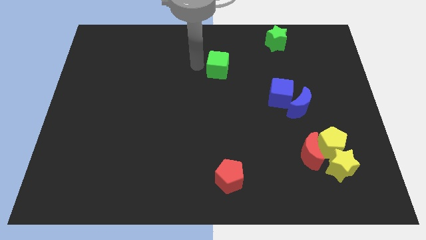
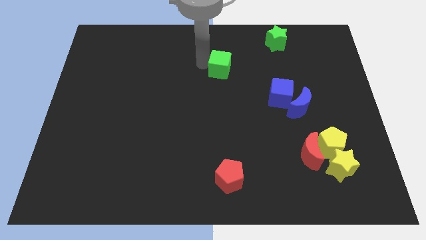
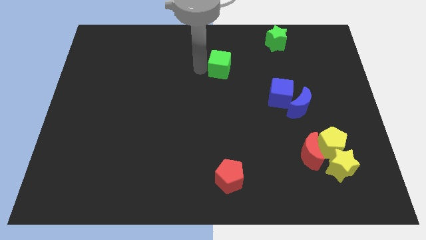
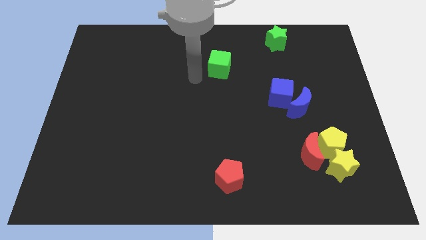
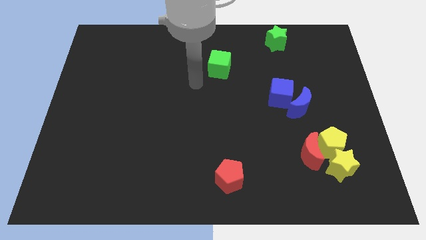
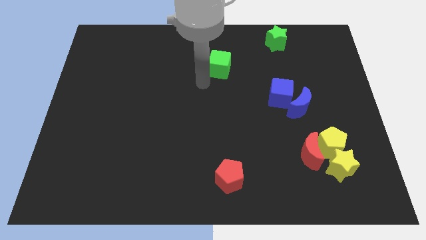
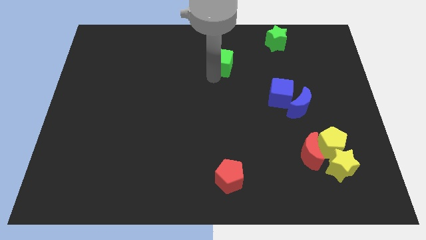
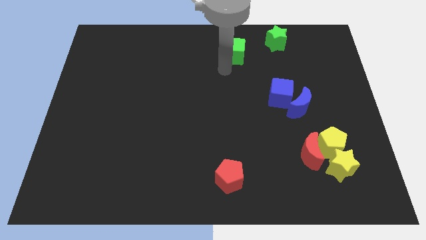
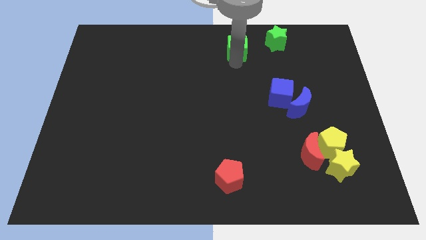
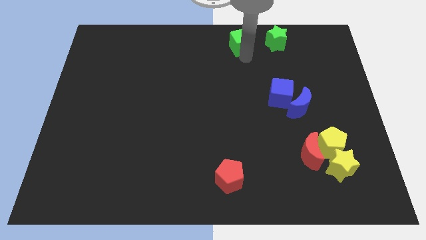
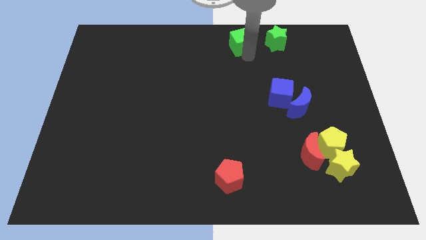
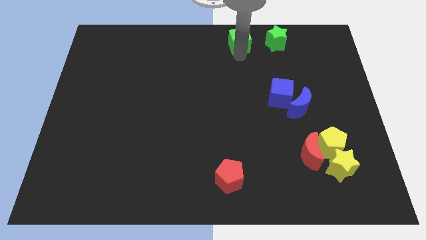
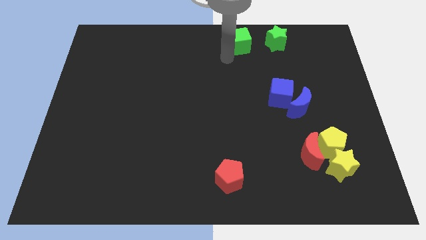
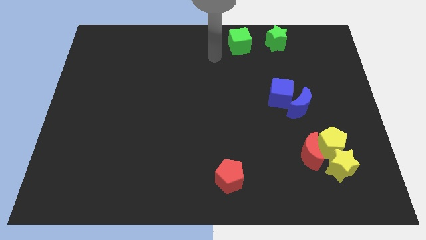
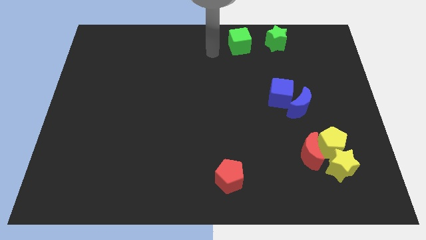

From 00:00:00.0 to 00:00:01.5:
place the green cube to the left side of the green star

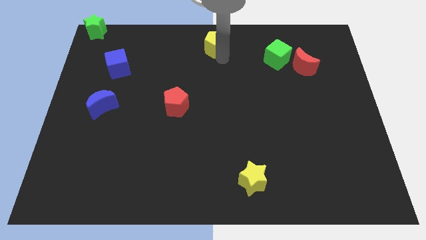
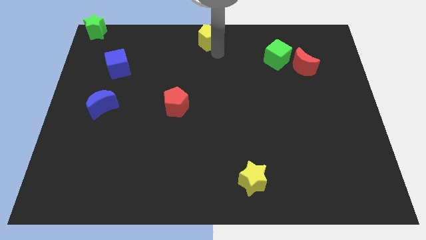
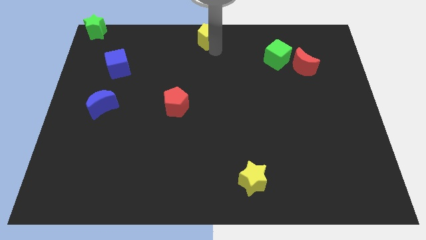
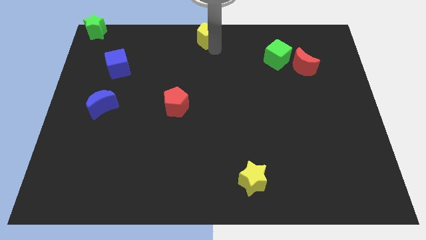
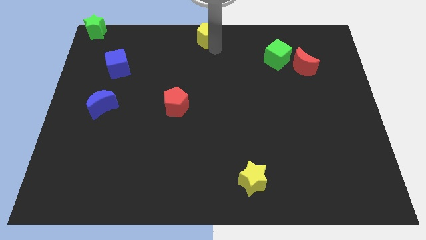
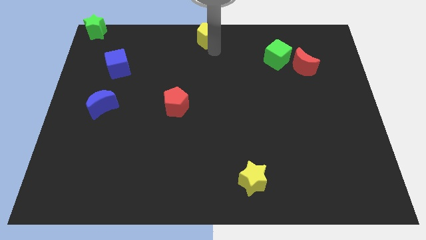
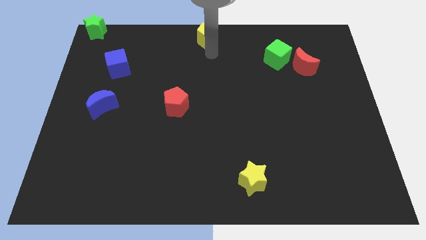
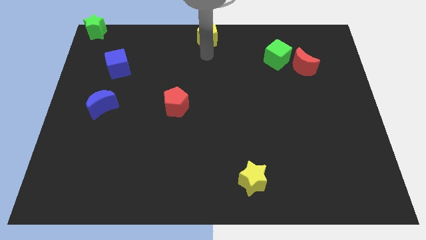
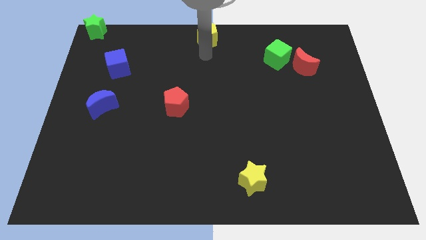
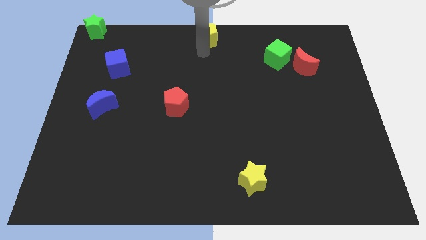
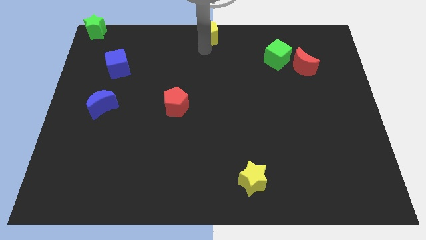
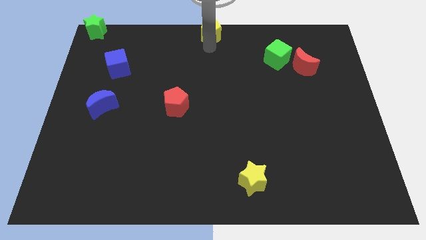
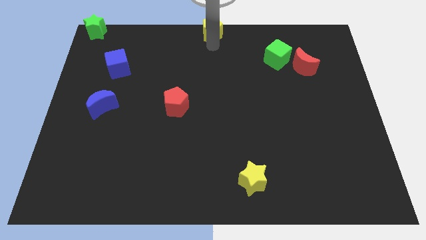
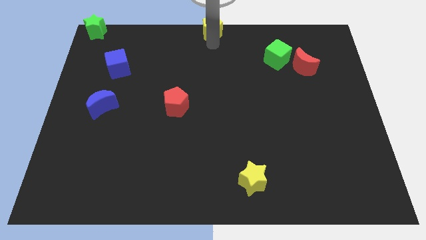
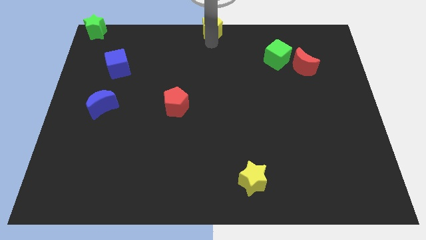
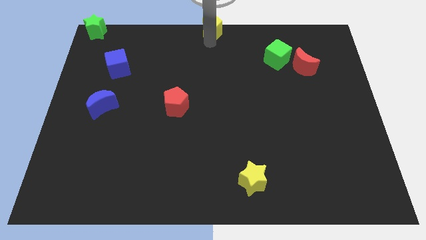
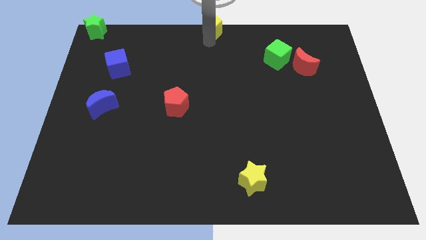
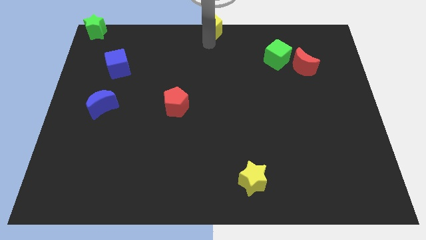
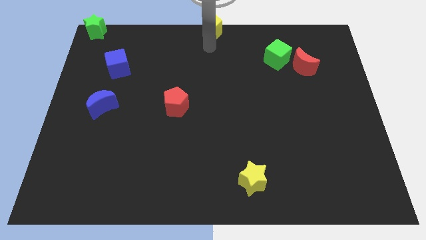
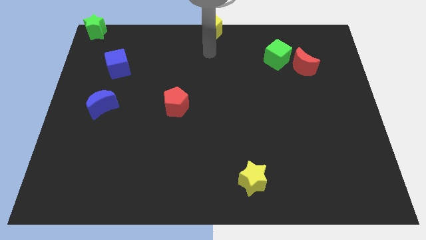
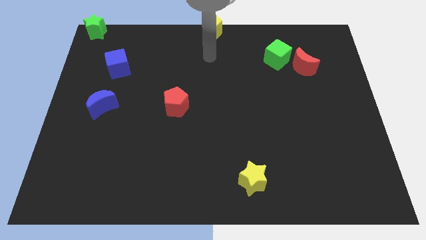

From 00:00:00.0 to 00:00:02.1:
push the yellow pentagon to the top centre of the board

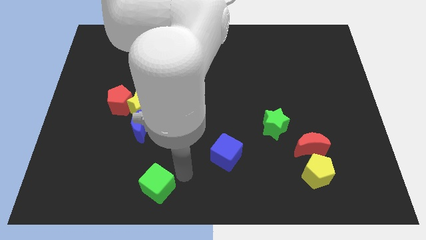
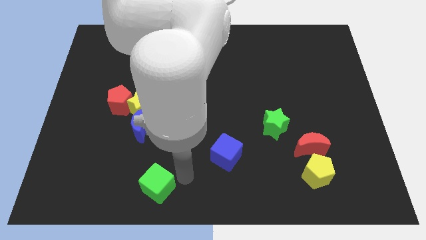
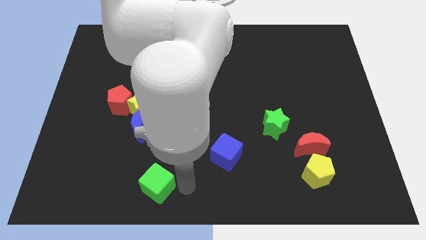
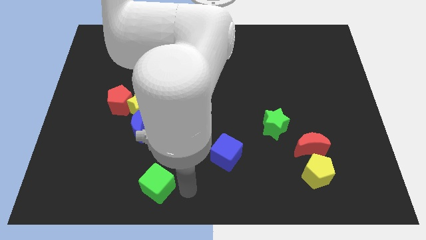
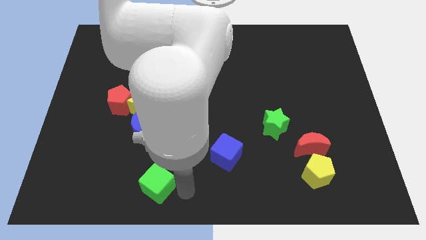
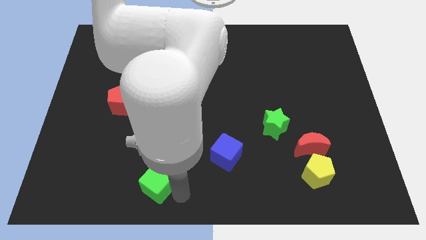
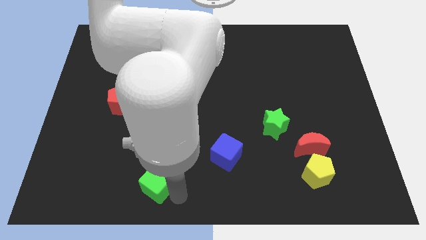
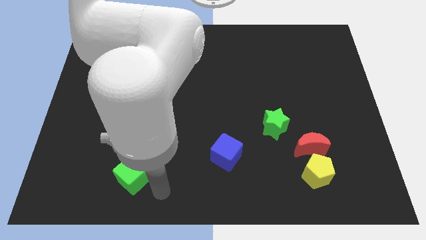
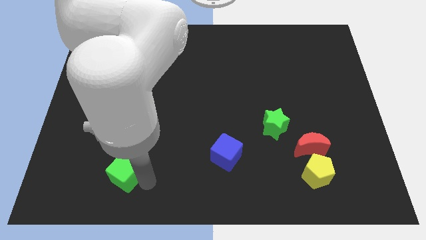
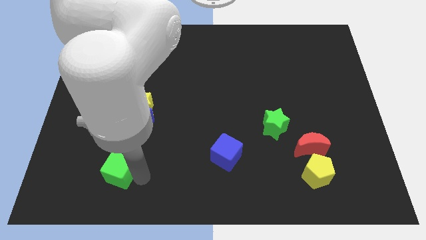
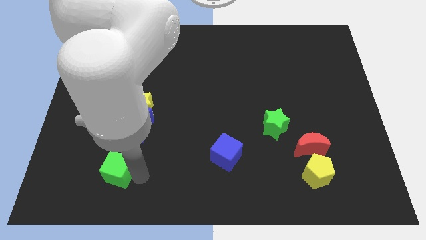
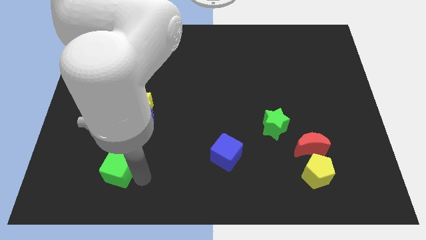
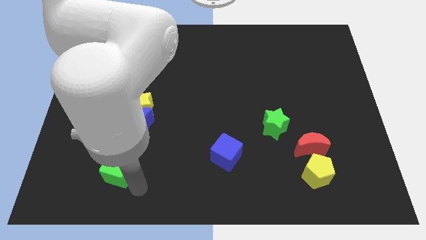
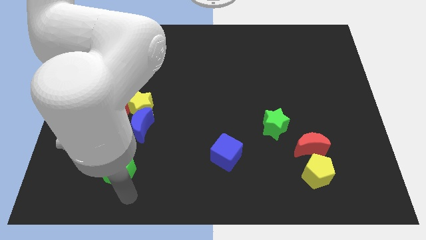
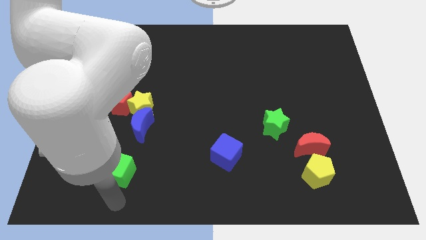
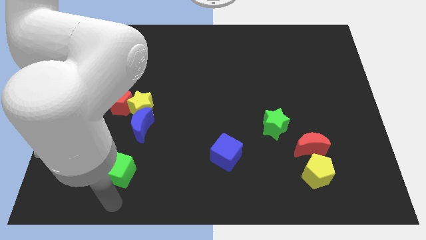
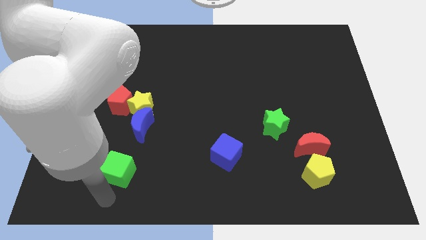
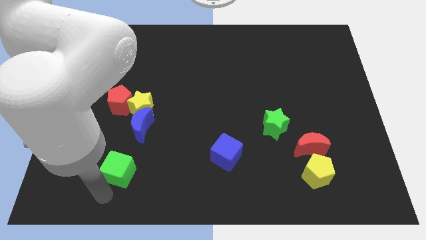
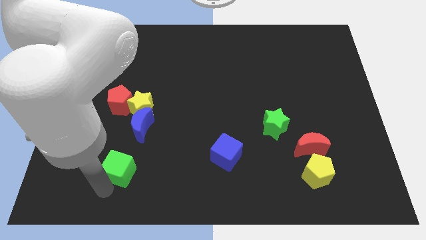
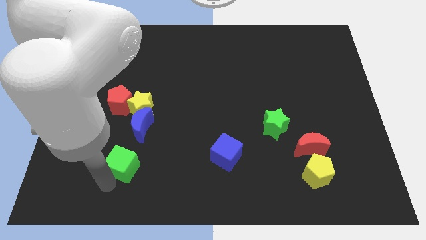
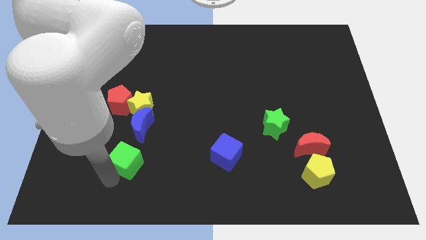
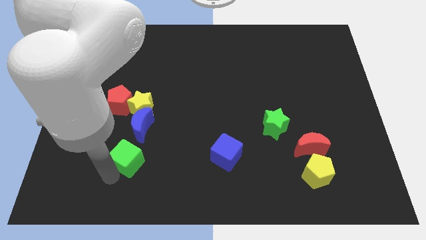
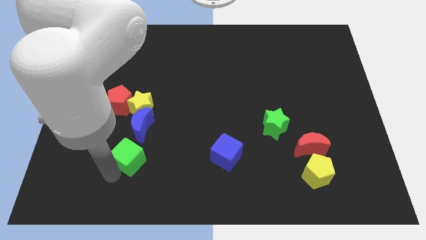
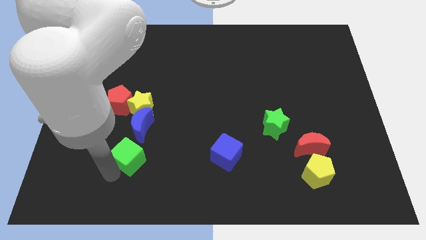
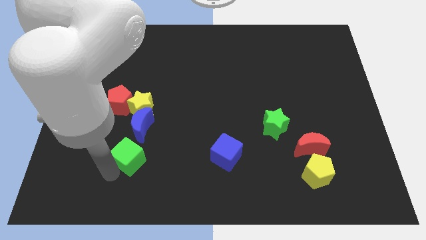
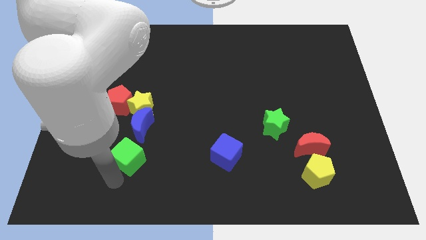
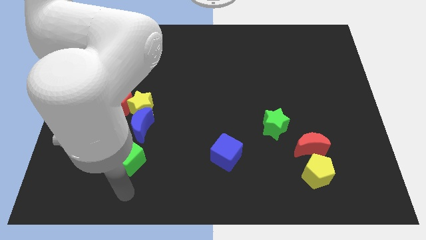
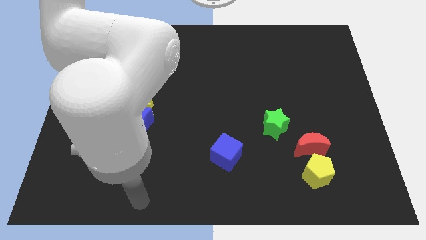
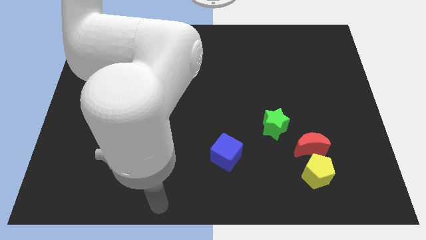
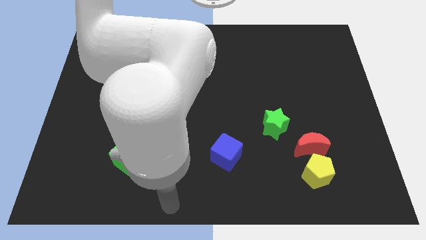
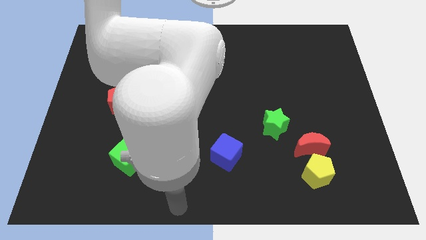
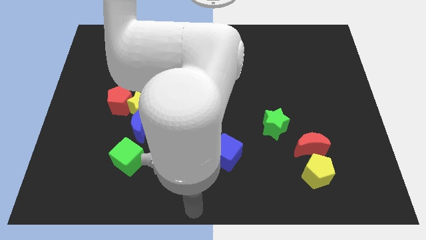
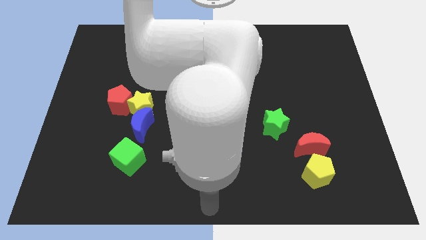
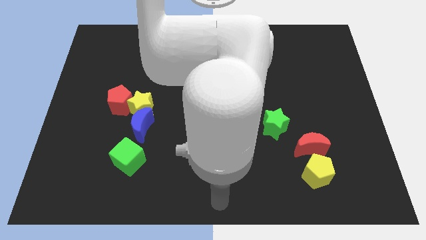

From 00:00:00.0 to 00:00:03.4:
drag green cube towards the bottom of the blue crescent

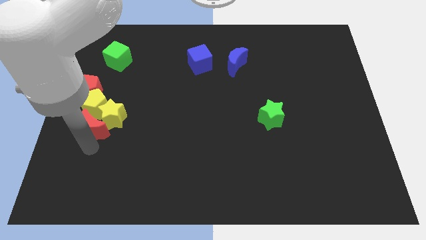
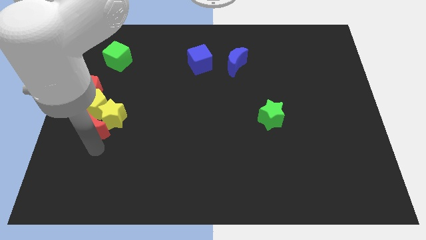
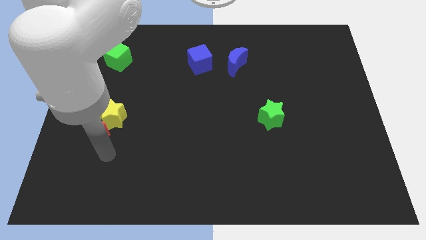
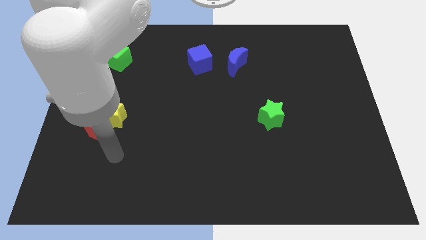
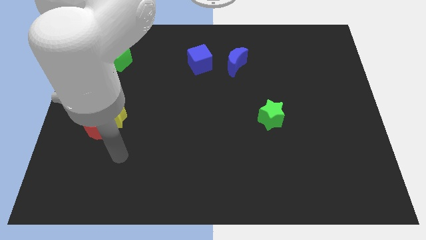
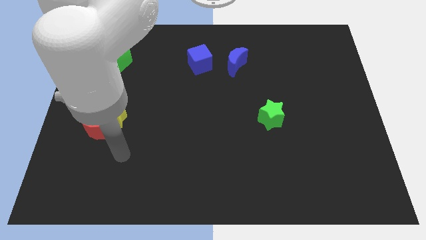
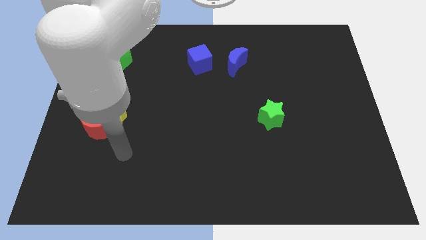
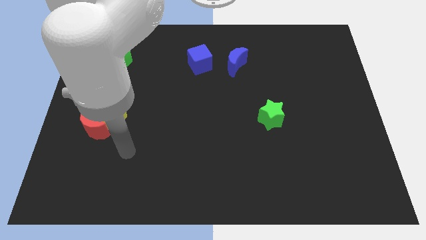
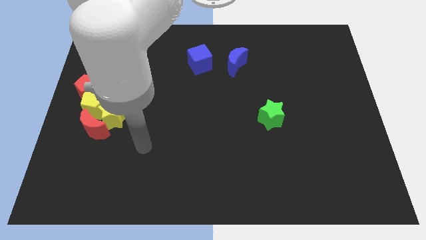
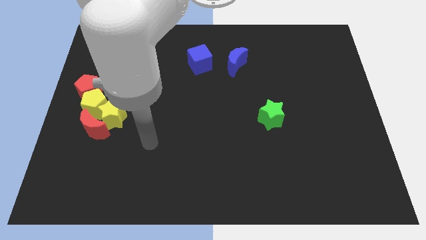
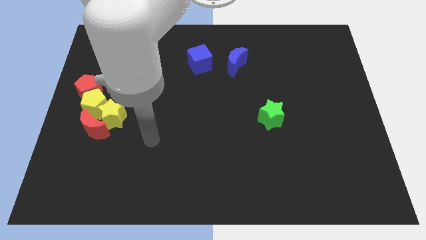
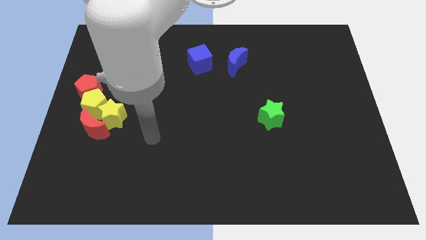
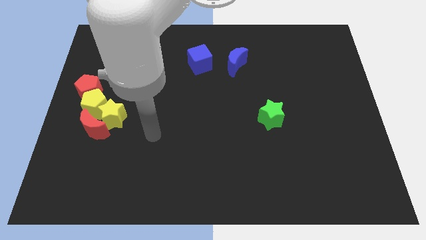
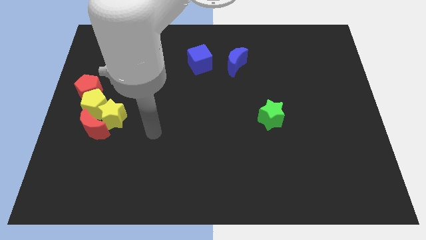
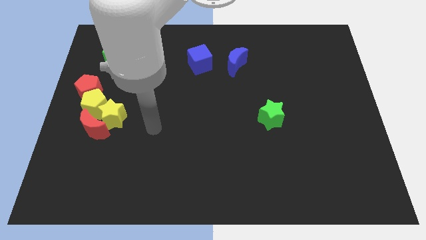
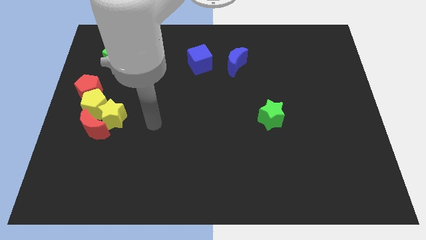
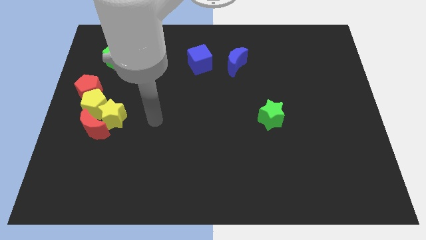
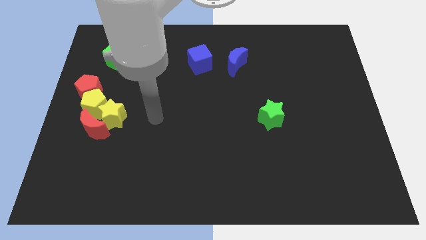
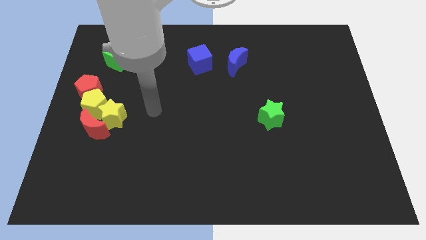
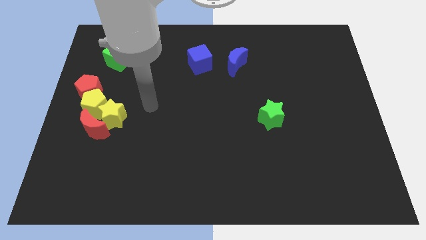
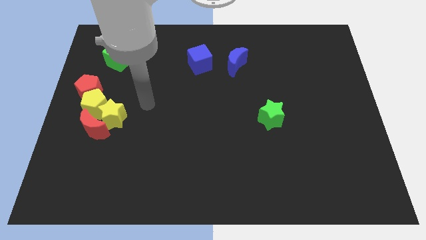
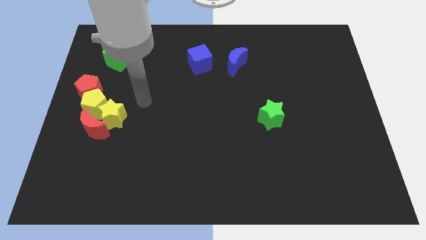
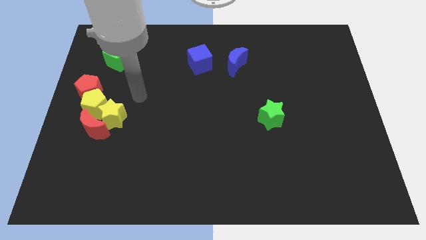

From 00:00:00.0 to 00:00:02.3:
move your arm away from the red moon
